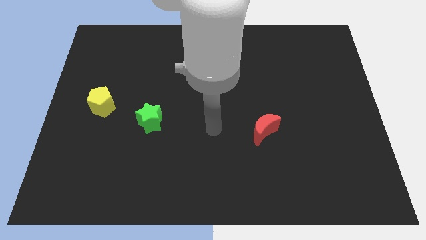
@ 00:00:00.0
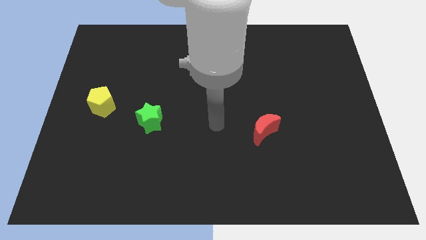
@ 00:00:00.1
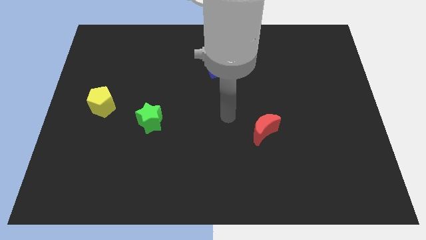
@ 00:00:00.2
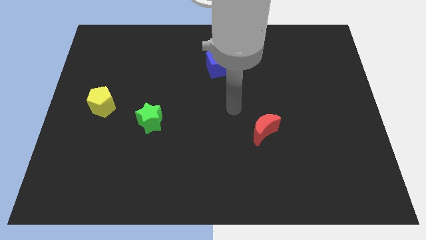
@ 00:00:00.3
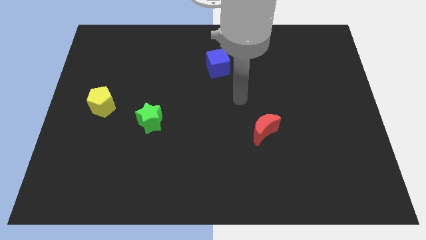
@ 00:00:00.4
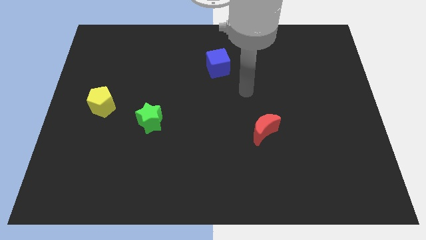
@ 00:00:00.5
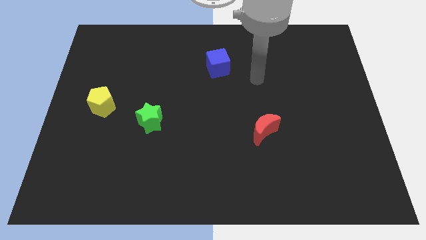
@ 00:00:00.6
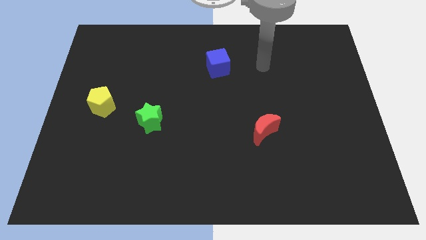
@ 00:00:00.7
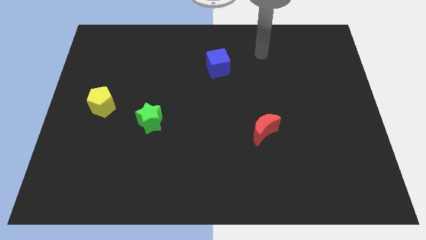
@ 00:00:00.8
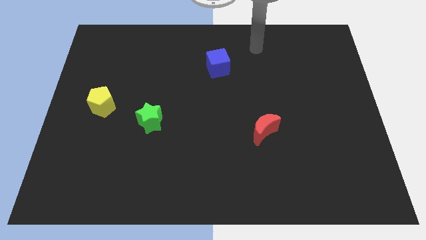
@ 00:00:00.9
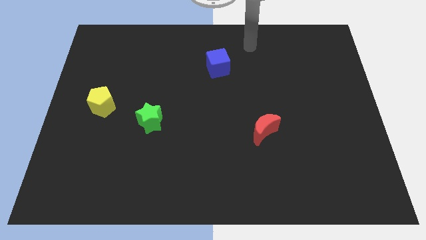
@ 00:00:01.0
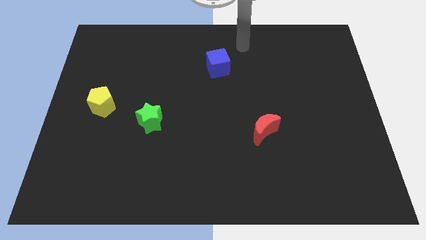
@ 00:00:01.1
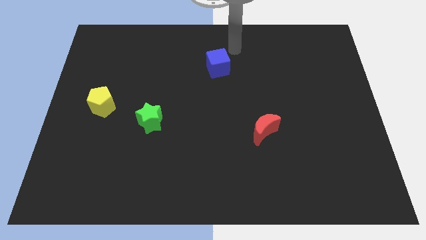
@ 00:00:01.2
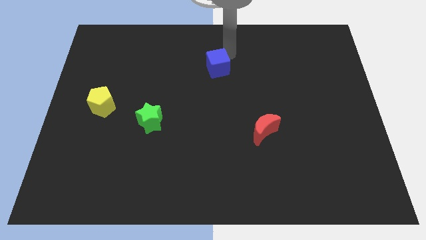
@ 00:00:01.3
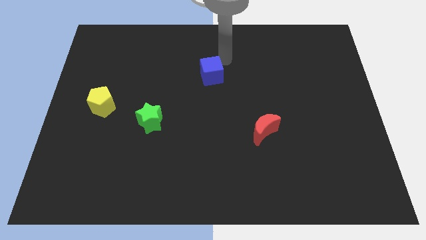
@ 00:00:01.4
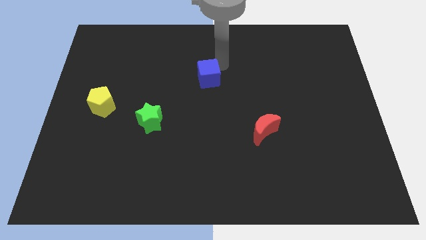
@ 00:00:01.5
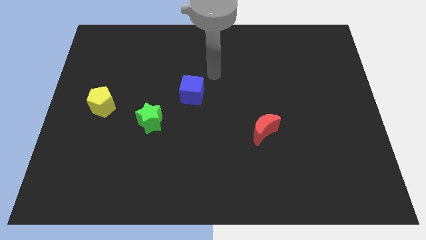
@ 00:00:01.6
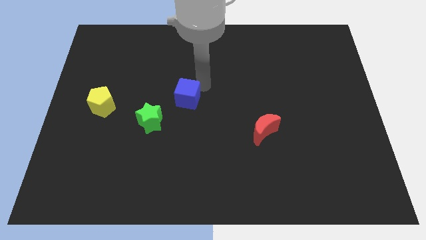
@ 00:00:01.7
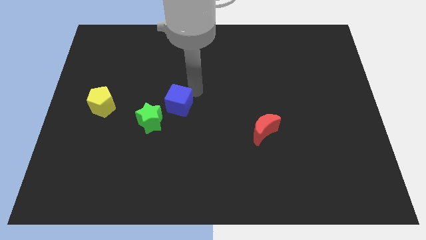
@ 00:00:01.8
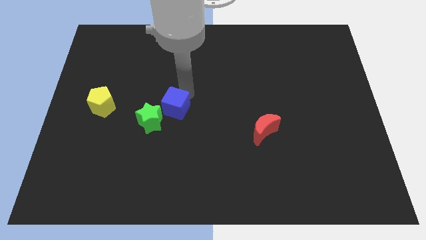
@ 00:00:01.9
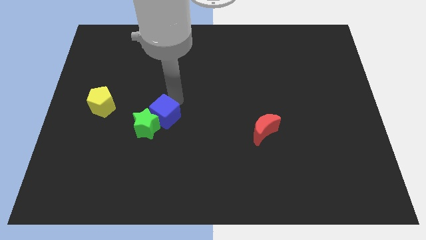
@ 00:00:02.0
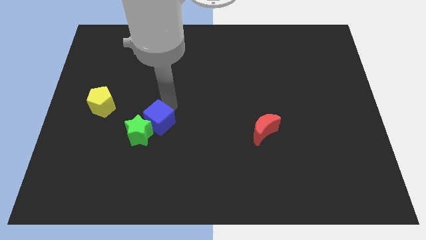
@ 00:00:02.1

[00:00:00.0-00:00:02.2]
push the cube towards the green block

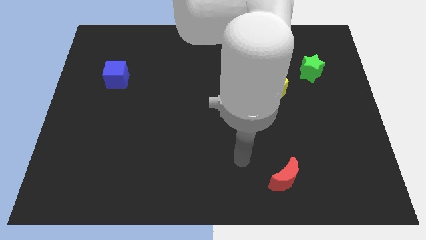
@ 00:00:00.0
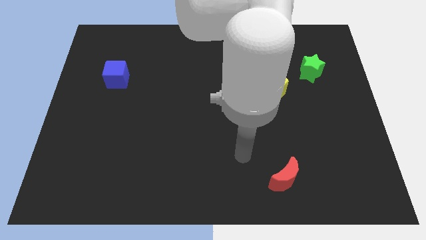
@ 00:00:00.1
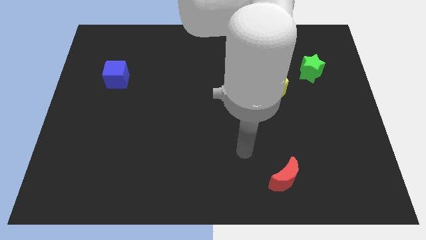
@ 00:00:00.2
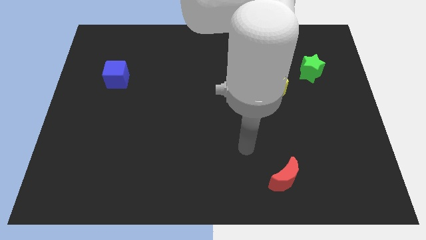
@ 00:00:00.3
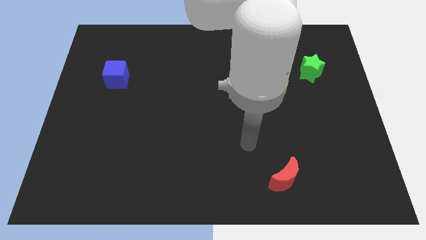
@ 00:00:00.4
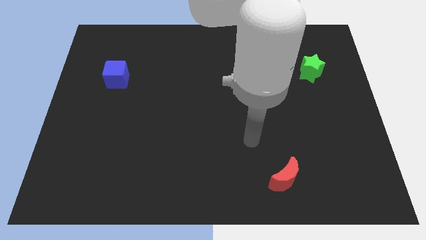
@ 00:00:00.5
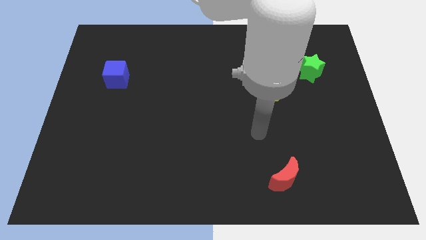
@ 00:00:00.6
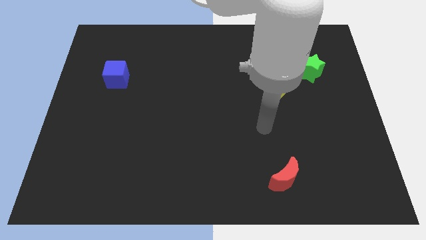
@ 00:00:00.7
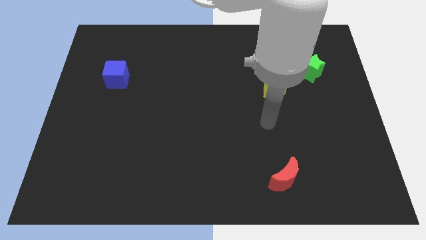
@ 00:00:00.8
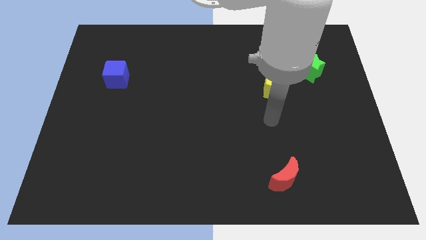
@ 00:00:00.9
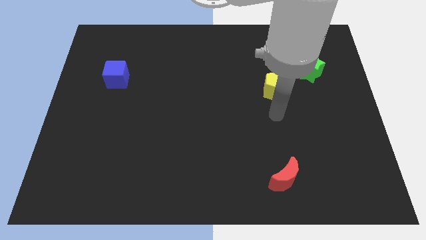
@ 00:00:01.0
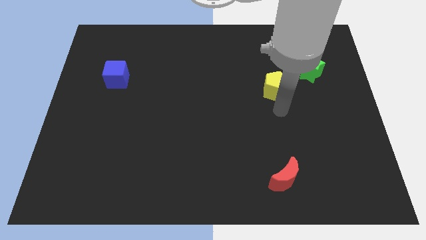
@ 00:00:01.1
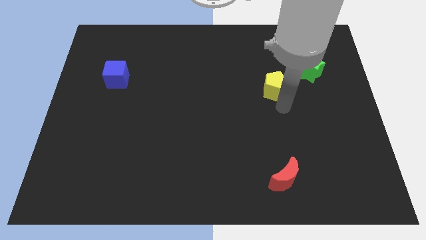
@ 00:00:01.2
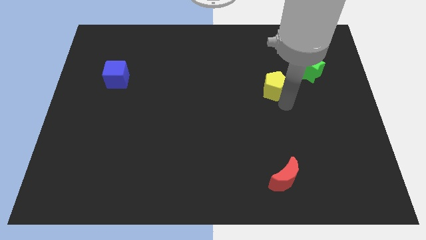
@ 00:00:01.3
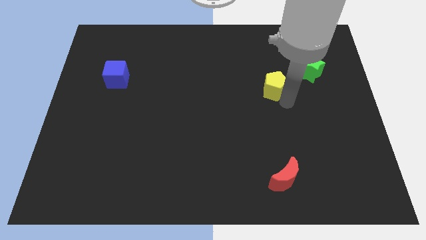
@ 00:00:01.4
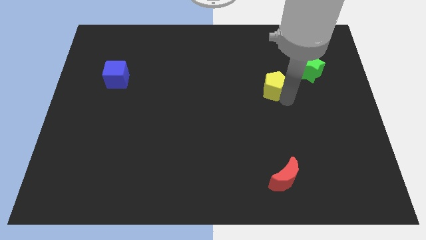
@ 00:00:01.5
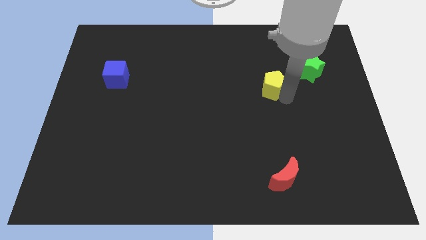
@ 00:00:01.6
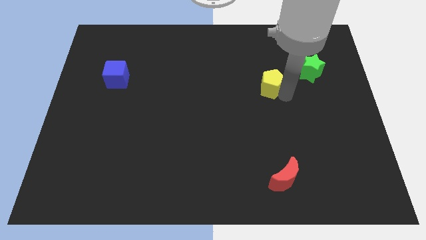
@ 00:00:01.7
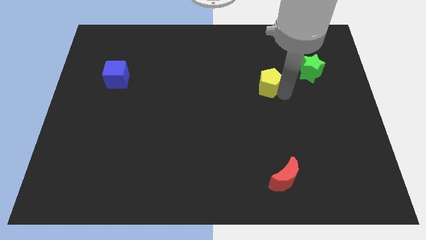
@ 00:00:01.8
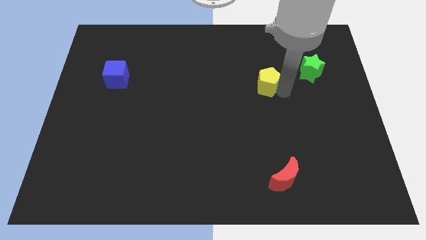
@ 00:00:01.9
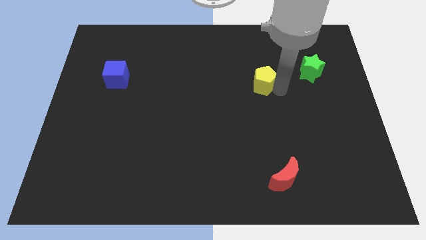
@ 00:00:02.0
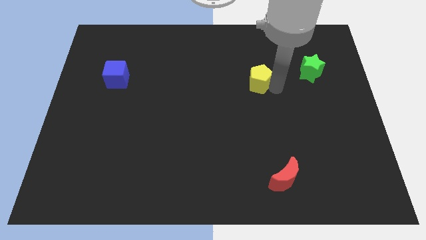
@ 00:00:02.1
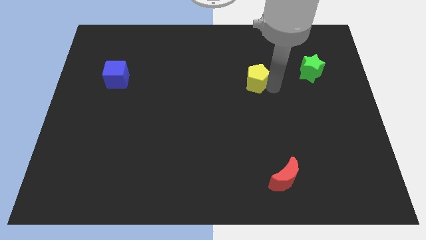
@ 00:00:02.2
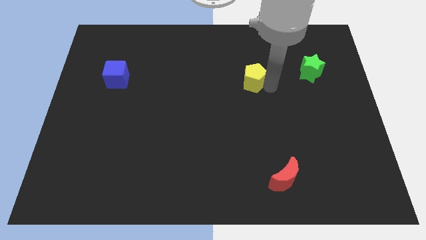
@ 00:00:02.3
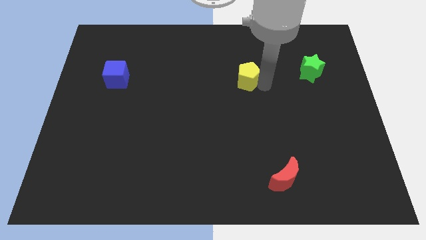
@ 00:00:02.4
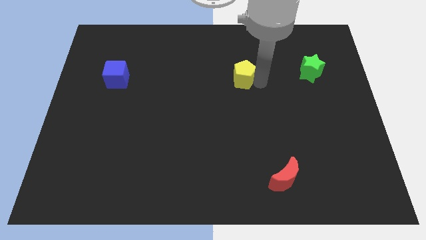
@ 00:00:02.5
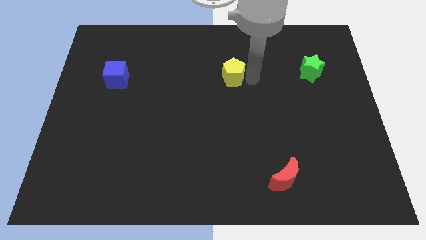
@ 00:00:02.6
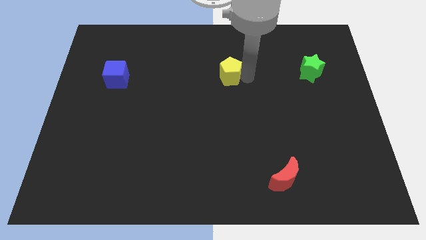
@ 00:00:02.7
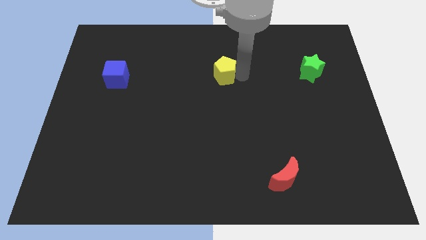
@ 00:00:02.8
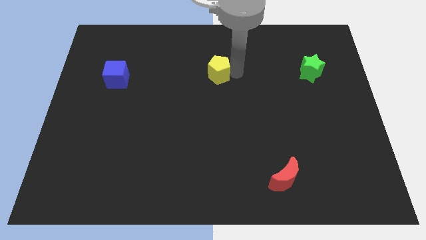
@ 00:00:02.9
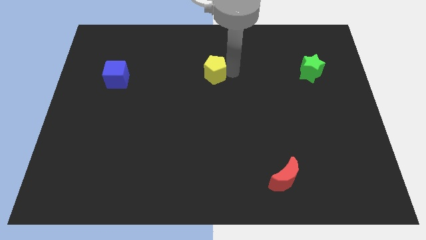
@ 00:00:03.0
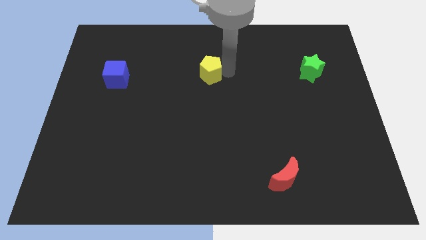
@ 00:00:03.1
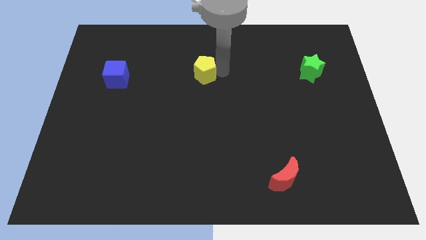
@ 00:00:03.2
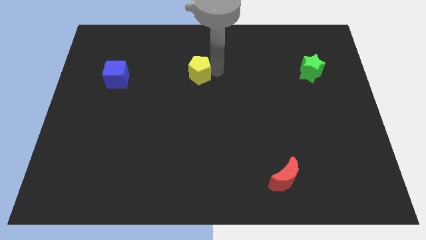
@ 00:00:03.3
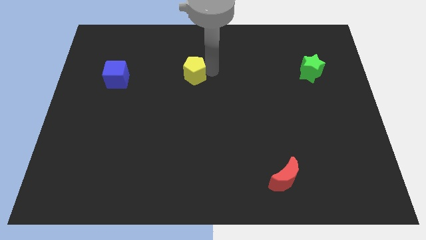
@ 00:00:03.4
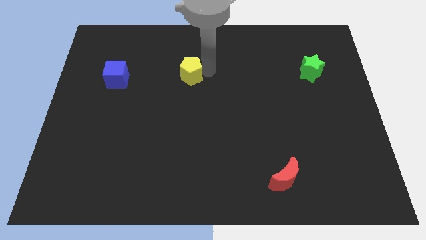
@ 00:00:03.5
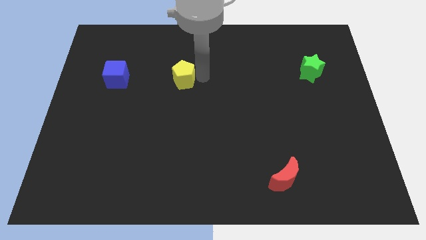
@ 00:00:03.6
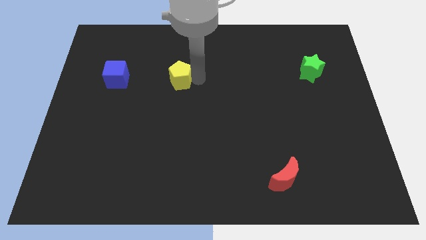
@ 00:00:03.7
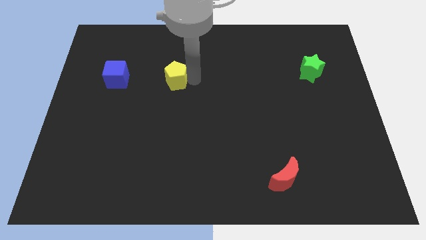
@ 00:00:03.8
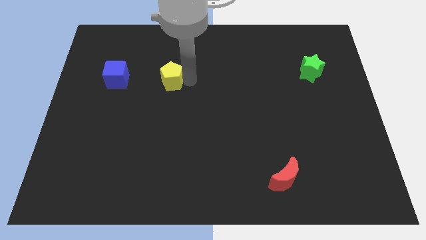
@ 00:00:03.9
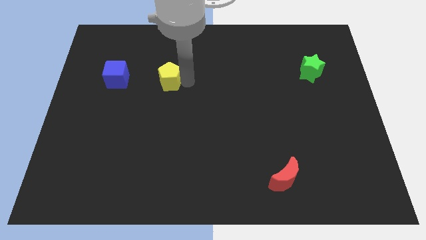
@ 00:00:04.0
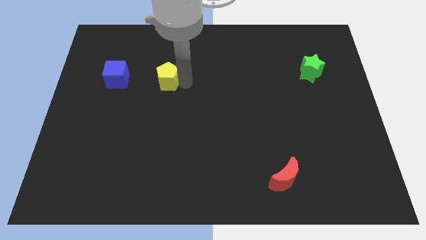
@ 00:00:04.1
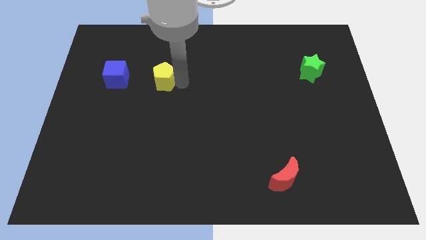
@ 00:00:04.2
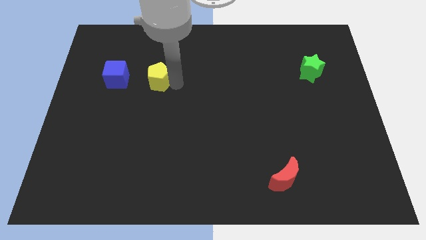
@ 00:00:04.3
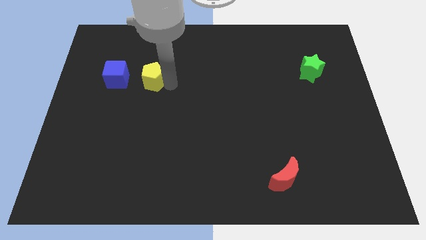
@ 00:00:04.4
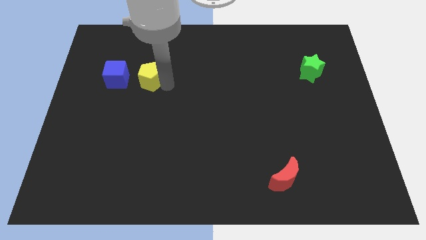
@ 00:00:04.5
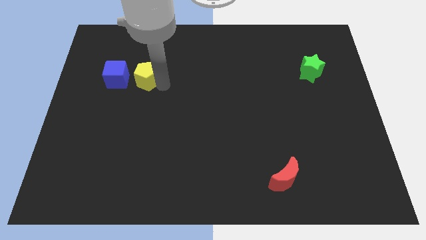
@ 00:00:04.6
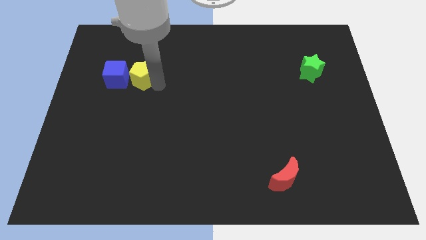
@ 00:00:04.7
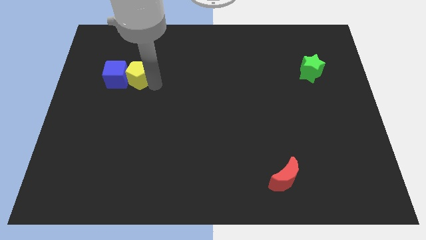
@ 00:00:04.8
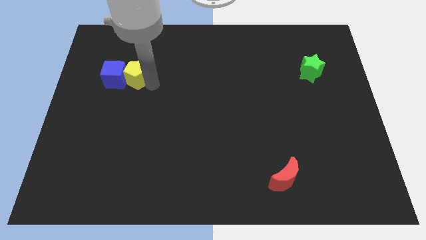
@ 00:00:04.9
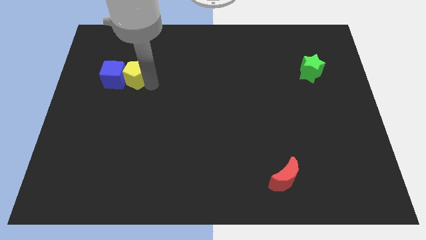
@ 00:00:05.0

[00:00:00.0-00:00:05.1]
put the yellow block to the blue block

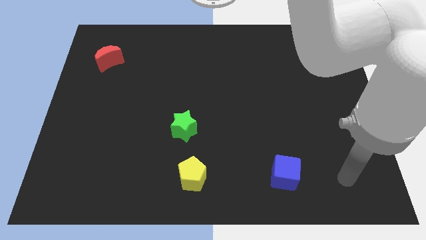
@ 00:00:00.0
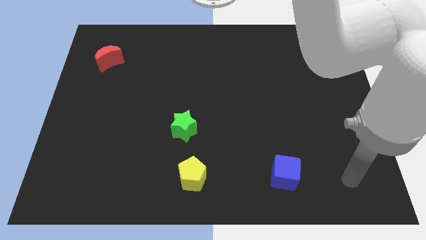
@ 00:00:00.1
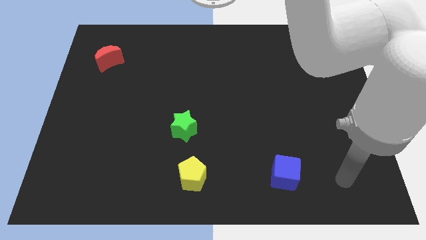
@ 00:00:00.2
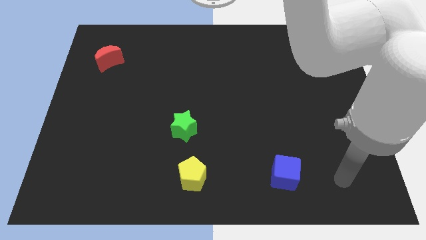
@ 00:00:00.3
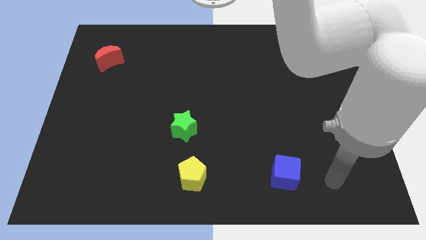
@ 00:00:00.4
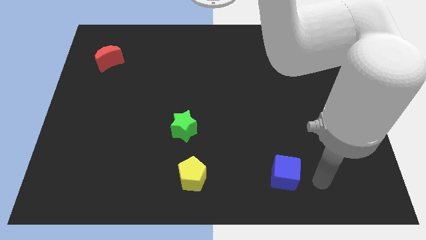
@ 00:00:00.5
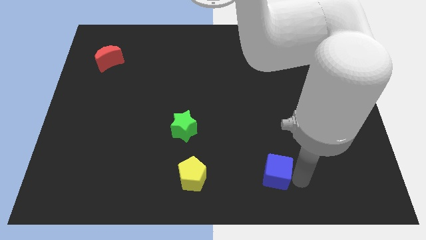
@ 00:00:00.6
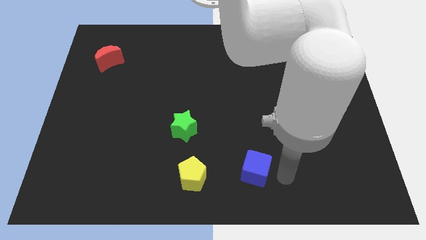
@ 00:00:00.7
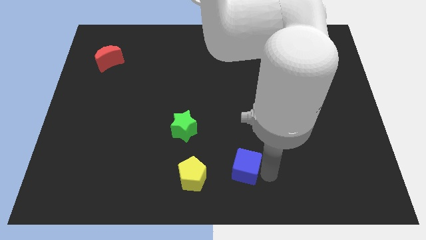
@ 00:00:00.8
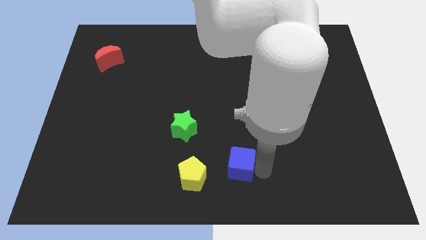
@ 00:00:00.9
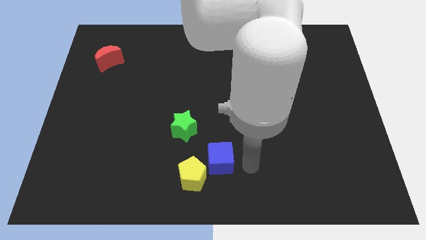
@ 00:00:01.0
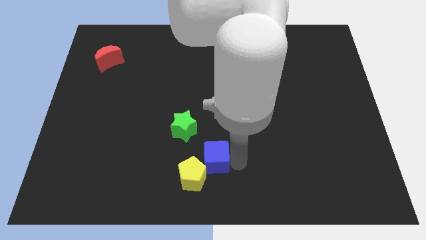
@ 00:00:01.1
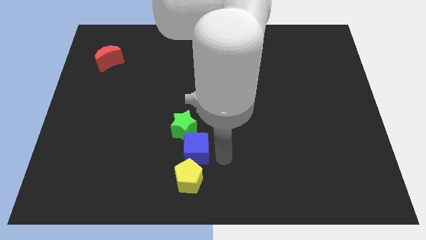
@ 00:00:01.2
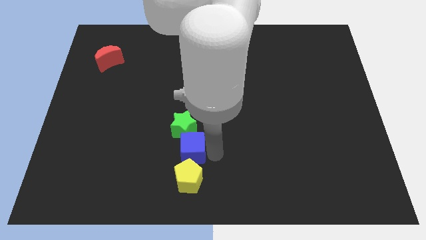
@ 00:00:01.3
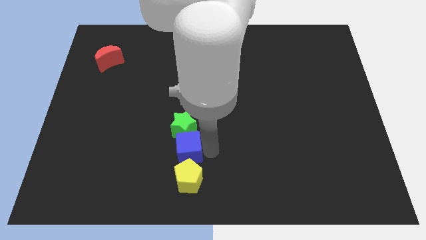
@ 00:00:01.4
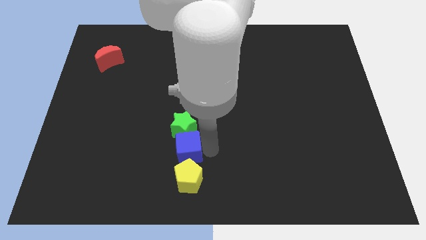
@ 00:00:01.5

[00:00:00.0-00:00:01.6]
put the blue cube next to the green star
